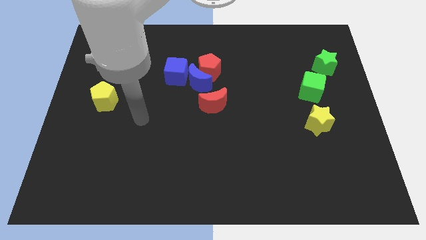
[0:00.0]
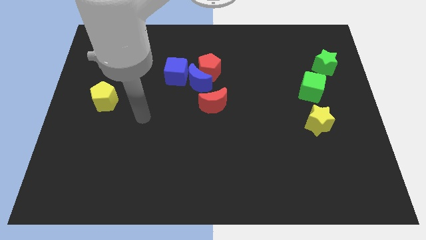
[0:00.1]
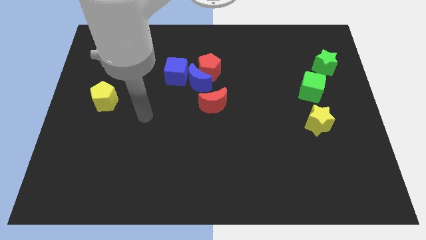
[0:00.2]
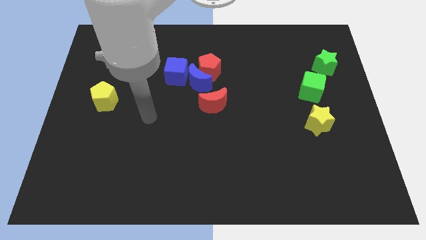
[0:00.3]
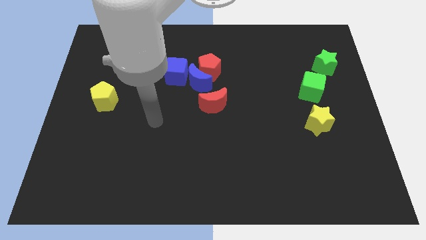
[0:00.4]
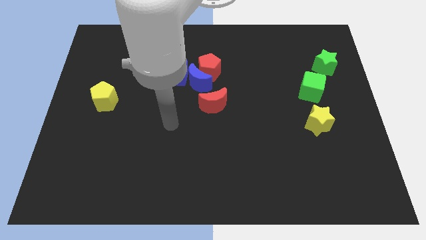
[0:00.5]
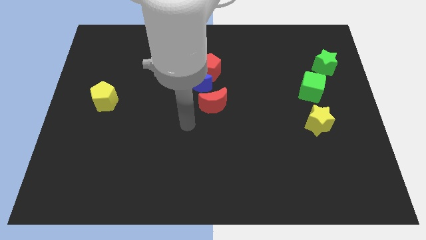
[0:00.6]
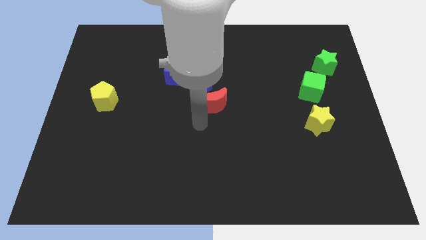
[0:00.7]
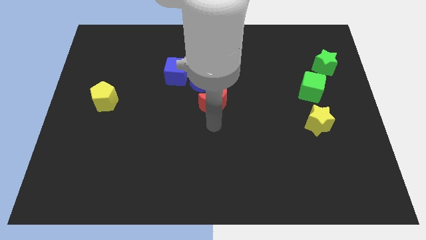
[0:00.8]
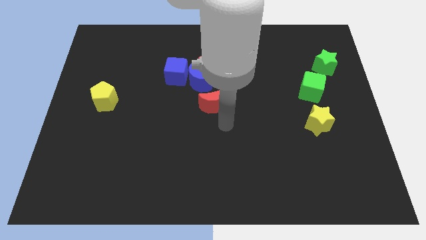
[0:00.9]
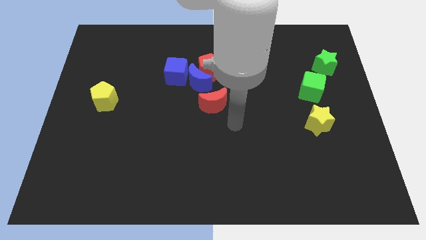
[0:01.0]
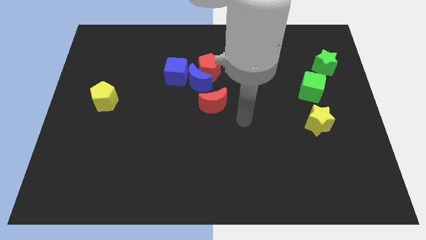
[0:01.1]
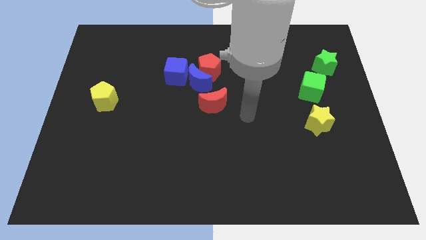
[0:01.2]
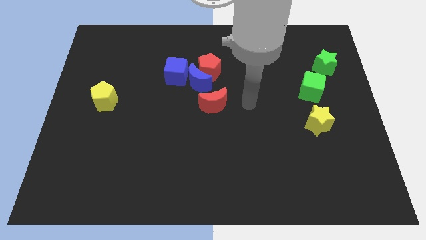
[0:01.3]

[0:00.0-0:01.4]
point your arm to the right side of the red crescent

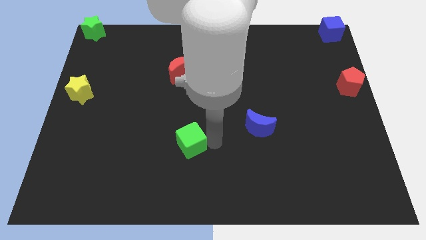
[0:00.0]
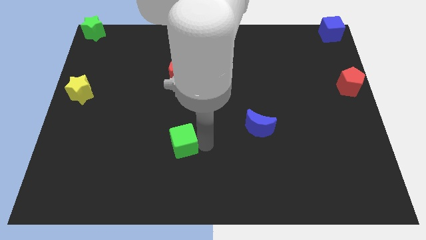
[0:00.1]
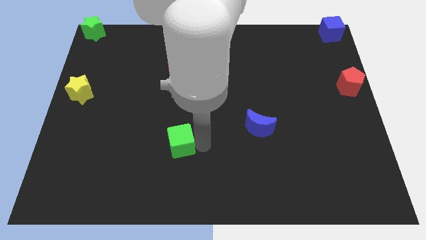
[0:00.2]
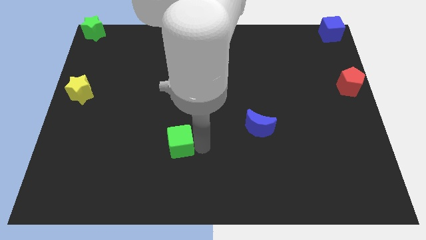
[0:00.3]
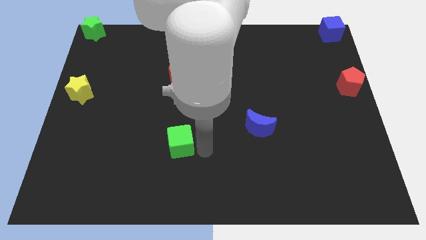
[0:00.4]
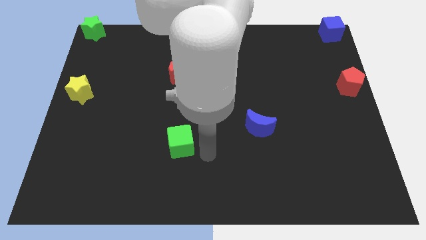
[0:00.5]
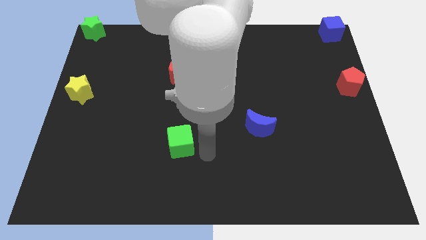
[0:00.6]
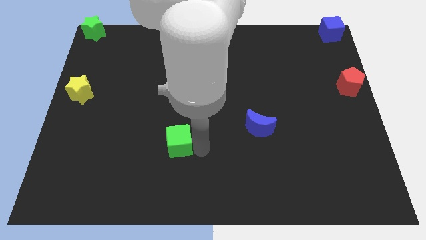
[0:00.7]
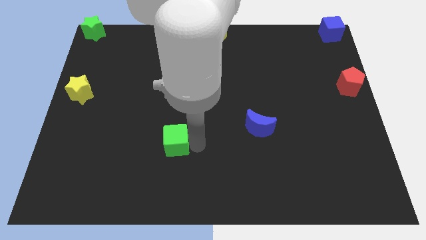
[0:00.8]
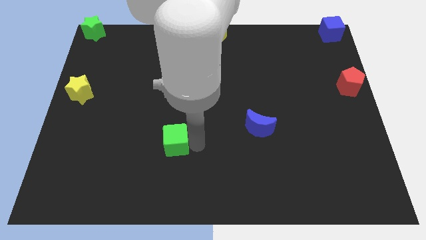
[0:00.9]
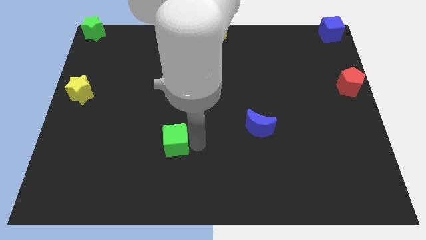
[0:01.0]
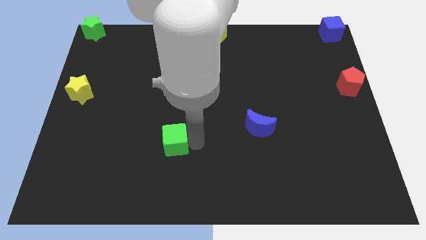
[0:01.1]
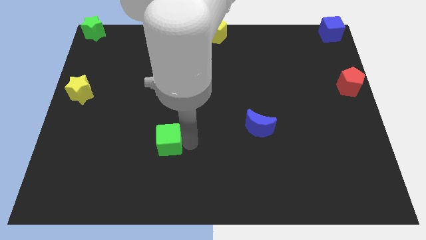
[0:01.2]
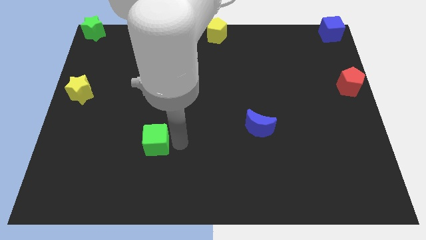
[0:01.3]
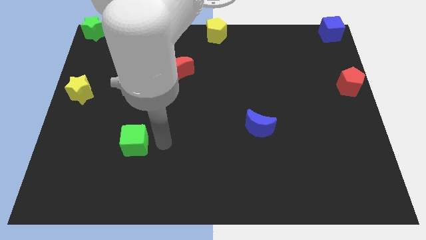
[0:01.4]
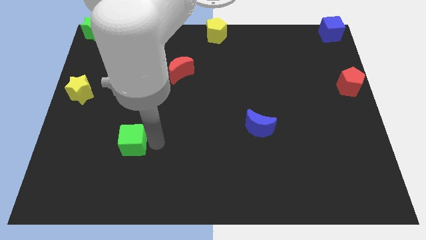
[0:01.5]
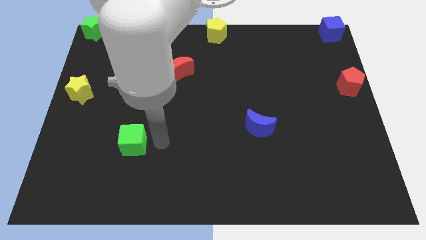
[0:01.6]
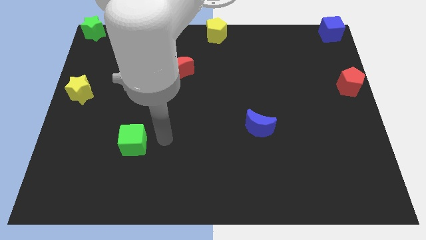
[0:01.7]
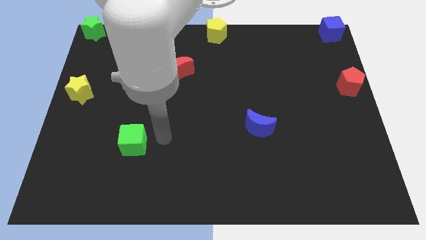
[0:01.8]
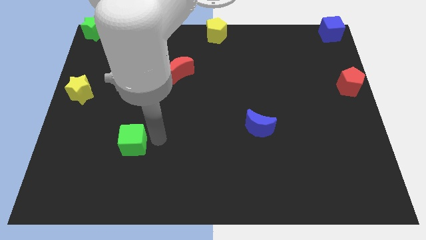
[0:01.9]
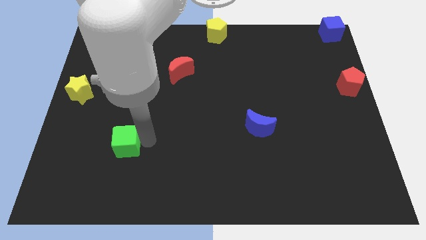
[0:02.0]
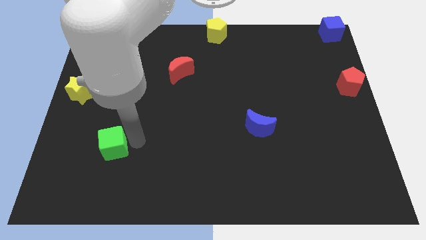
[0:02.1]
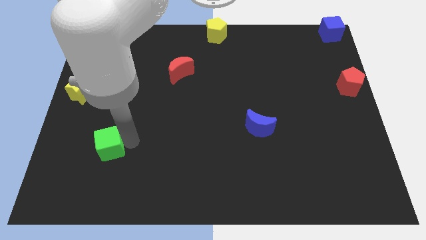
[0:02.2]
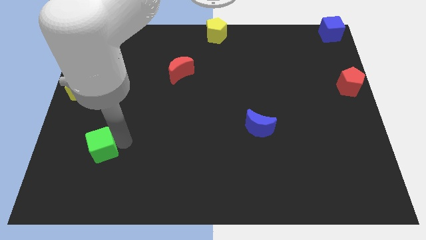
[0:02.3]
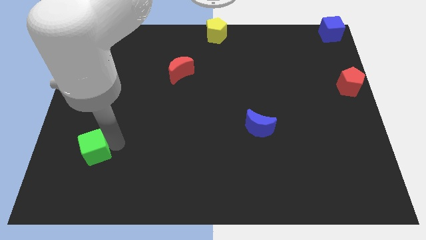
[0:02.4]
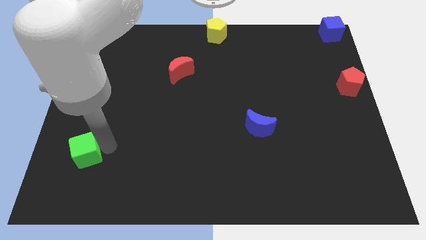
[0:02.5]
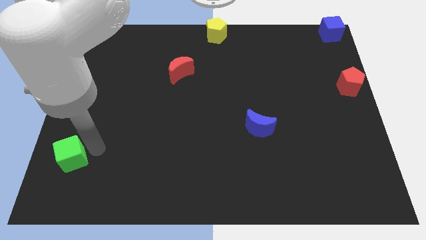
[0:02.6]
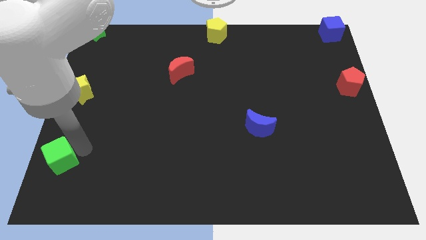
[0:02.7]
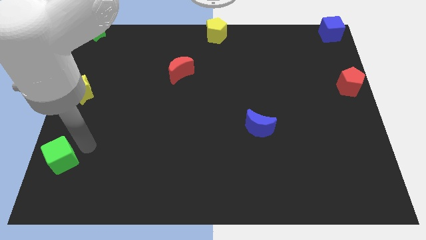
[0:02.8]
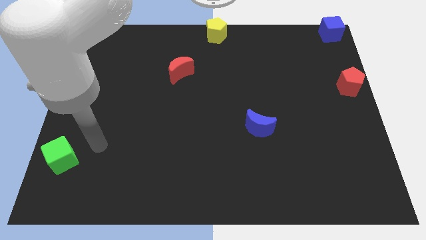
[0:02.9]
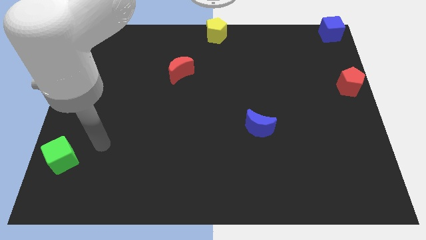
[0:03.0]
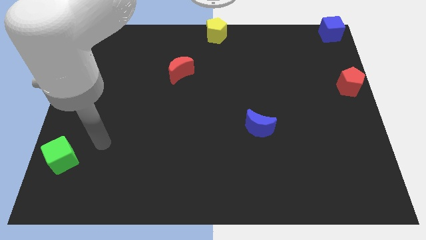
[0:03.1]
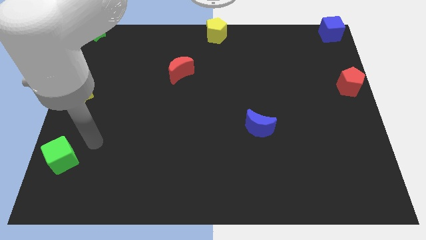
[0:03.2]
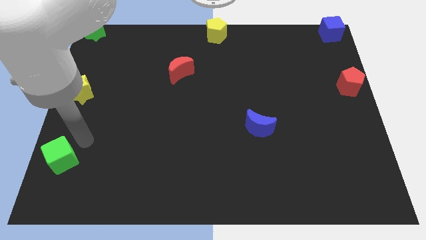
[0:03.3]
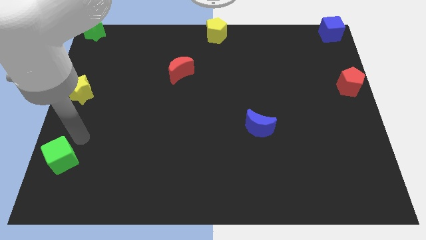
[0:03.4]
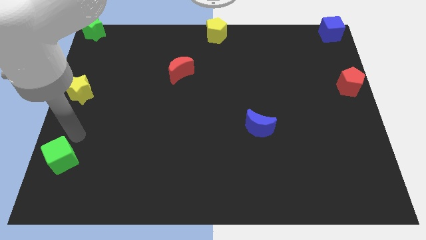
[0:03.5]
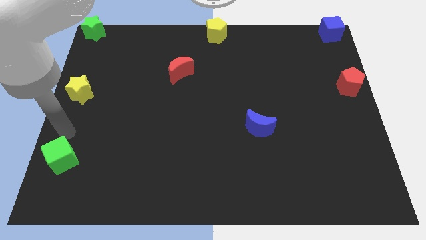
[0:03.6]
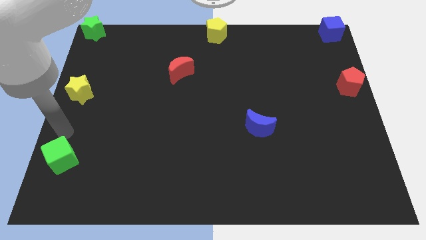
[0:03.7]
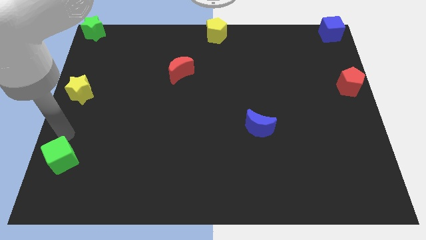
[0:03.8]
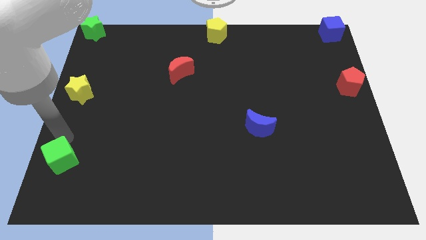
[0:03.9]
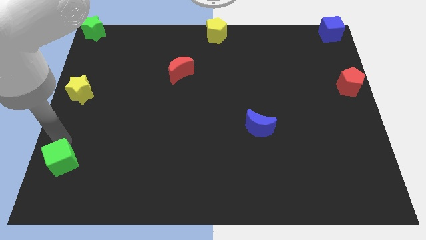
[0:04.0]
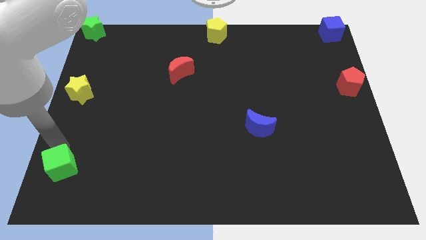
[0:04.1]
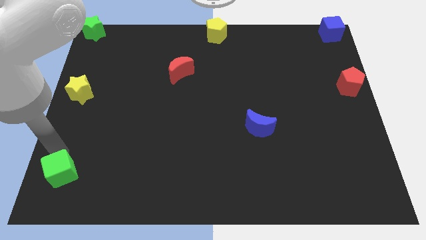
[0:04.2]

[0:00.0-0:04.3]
slide the green cube vertically to the bottom side of the yellow star

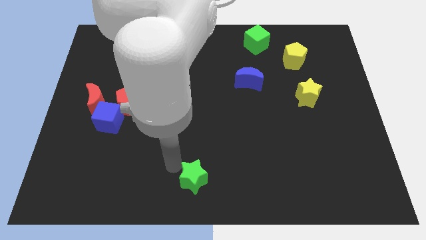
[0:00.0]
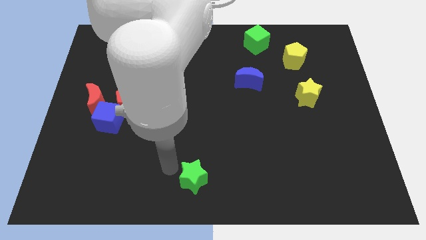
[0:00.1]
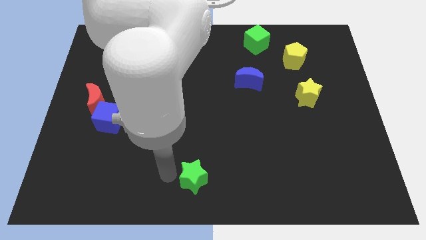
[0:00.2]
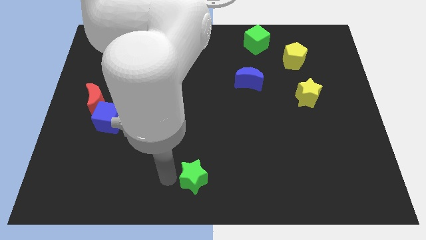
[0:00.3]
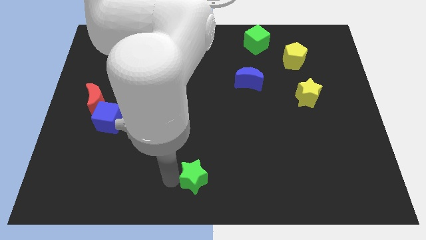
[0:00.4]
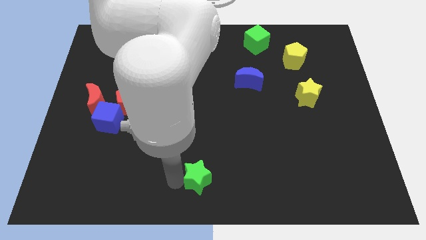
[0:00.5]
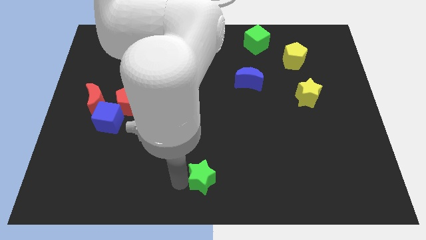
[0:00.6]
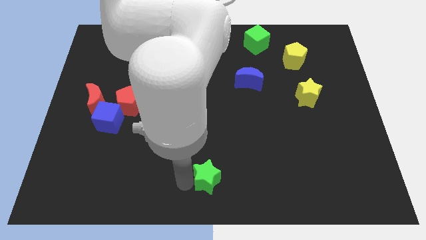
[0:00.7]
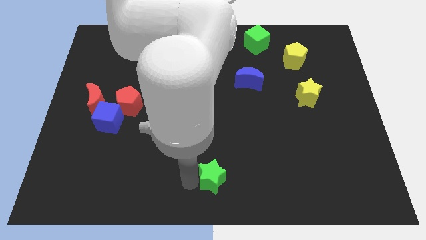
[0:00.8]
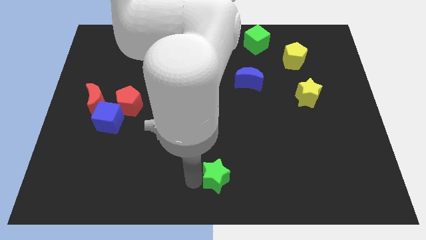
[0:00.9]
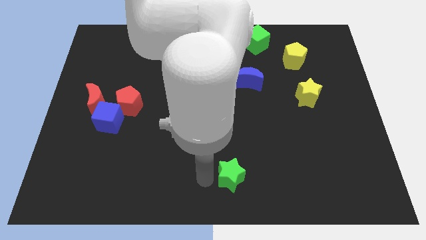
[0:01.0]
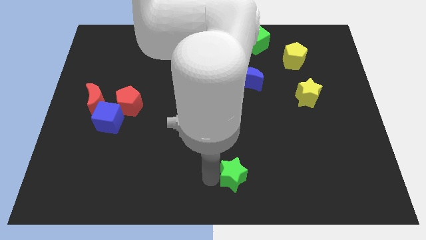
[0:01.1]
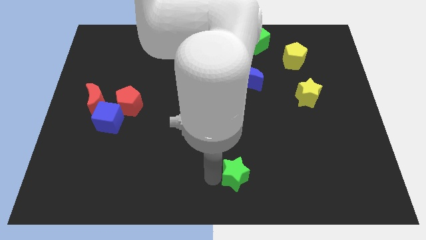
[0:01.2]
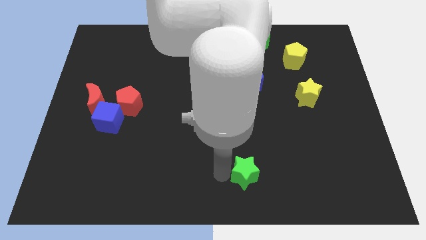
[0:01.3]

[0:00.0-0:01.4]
move green star to the right

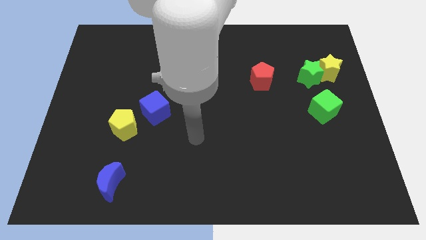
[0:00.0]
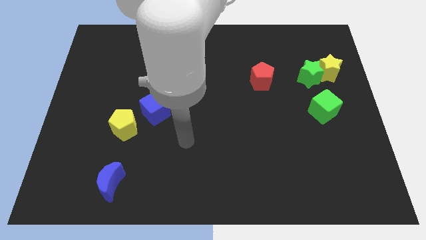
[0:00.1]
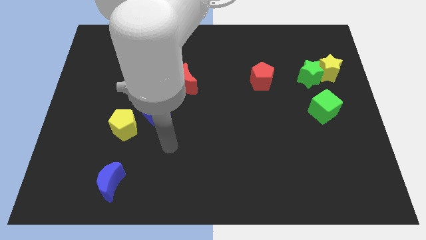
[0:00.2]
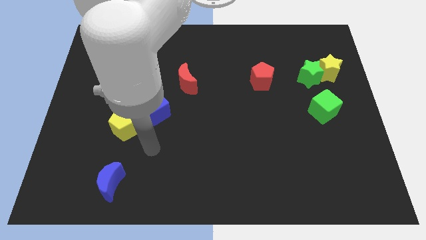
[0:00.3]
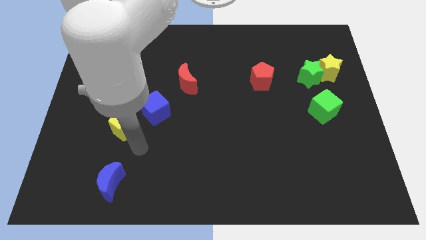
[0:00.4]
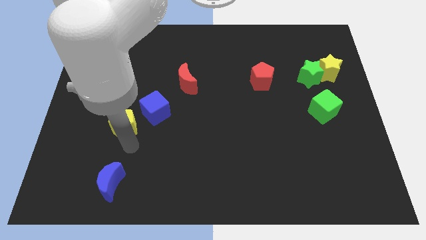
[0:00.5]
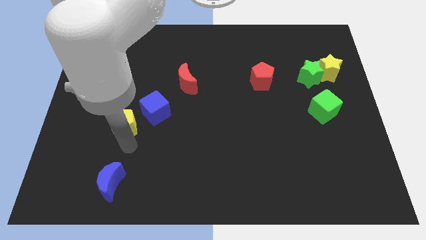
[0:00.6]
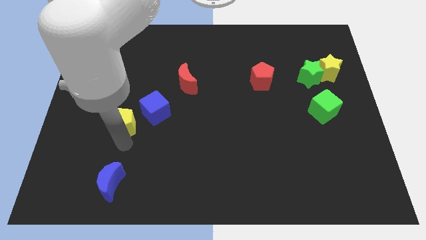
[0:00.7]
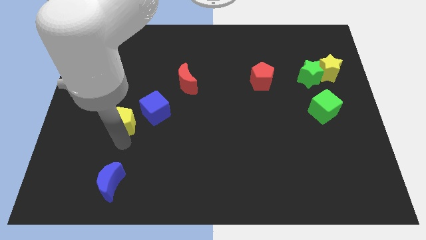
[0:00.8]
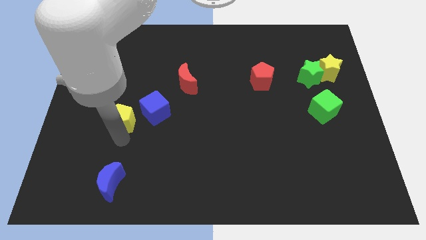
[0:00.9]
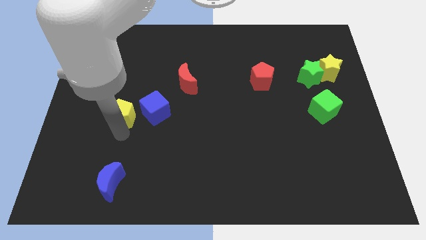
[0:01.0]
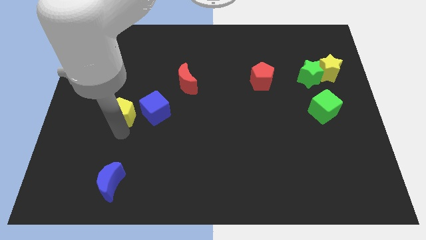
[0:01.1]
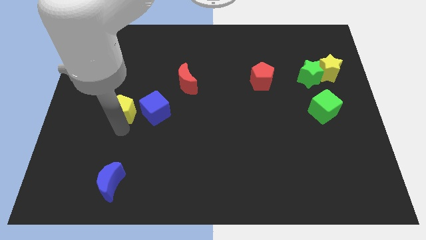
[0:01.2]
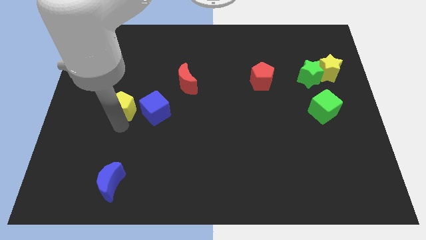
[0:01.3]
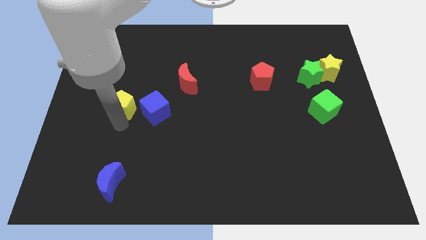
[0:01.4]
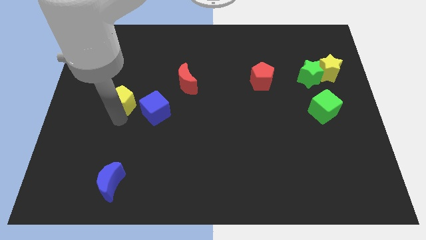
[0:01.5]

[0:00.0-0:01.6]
move the yellow pentagon to the top of the board

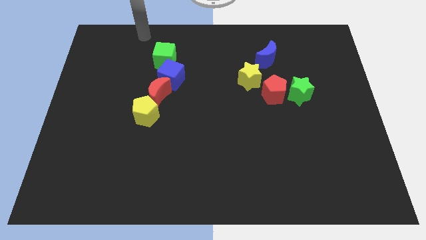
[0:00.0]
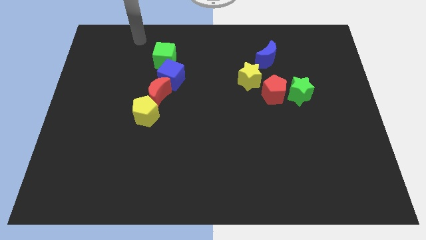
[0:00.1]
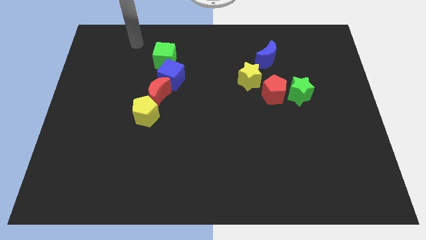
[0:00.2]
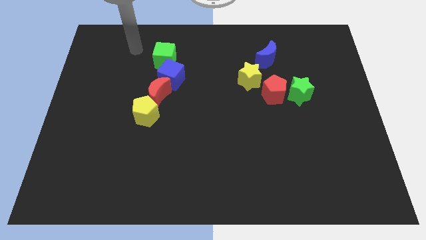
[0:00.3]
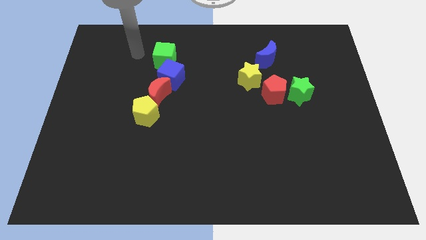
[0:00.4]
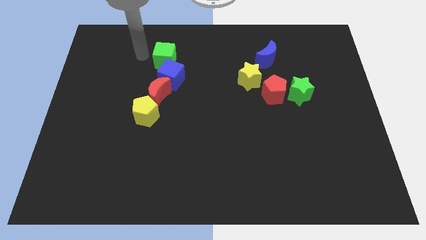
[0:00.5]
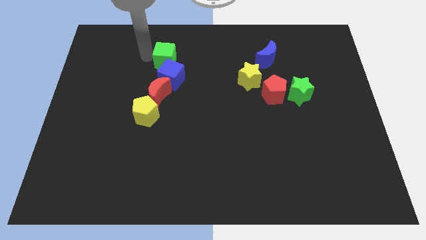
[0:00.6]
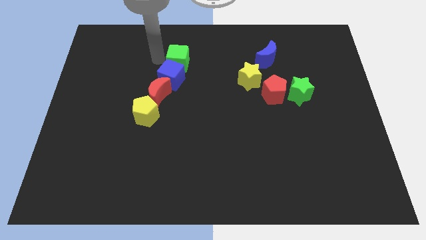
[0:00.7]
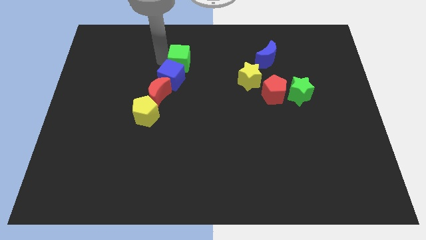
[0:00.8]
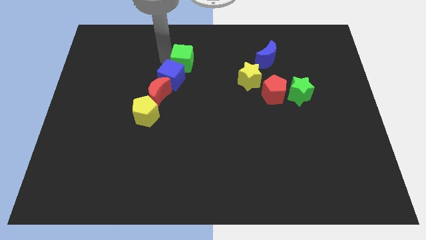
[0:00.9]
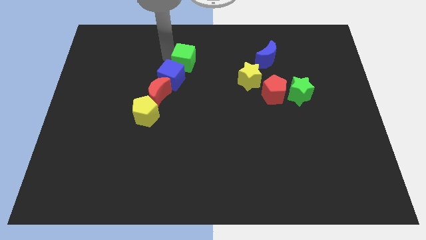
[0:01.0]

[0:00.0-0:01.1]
push the green star slightly into the diagonal line
